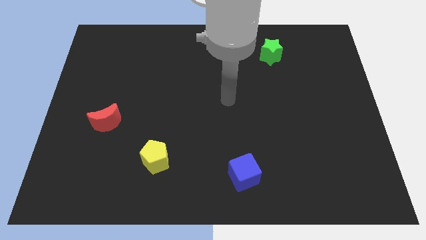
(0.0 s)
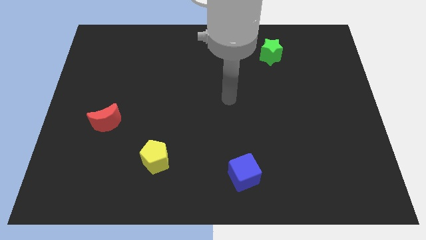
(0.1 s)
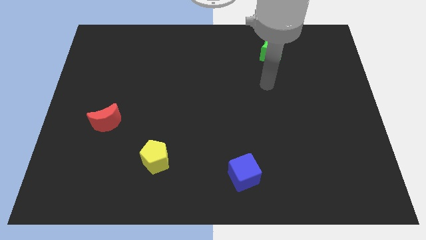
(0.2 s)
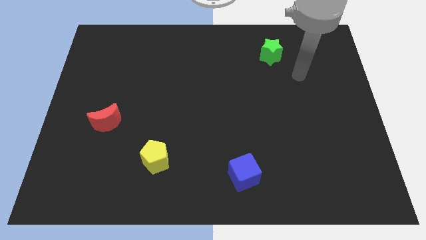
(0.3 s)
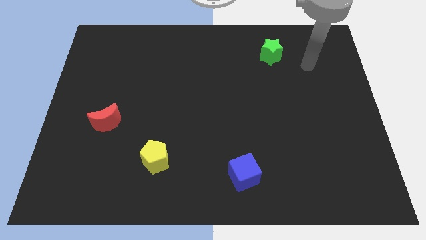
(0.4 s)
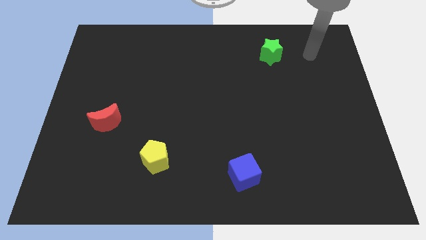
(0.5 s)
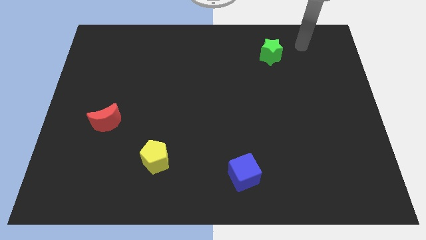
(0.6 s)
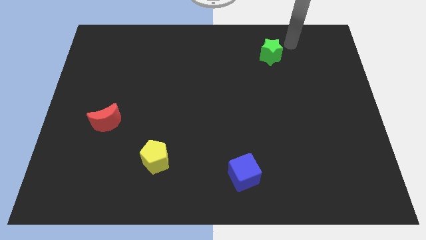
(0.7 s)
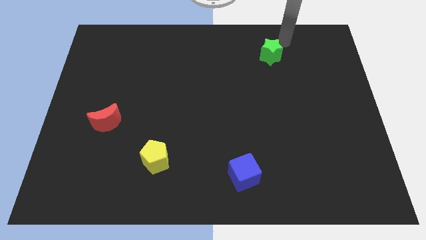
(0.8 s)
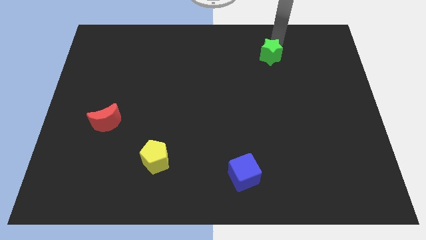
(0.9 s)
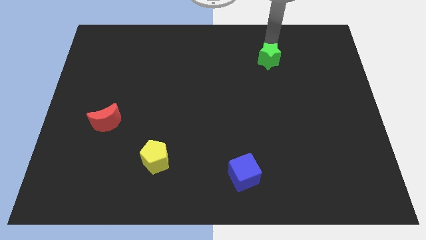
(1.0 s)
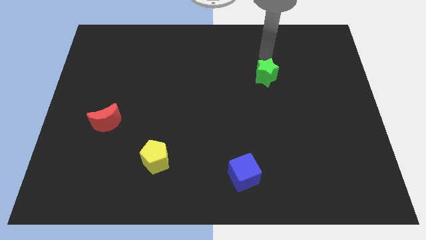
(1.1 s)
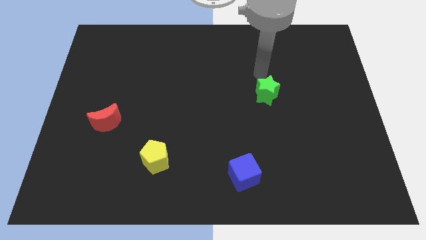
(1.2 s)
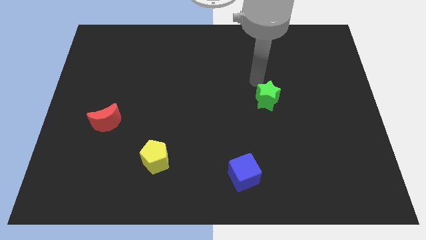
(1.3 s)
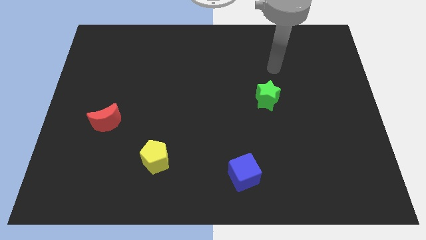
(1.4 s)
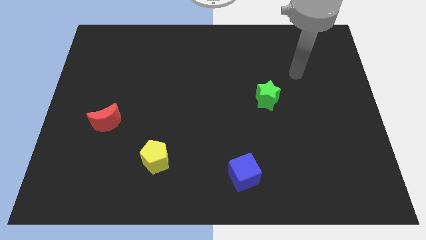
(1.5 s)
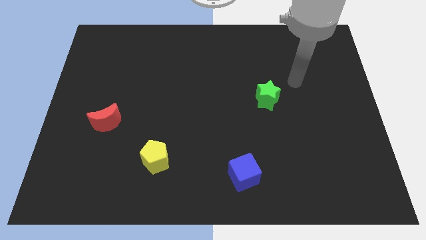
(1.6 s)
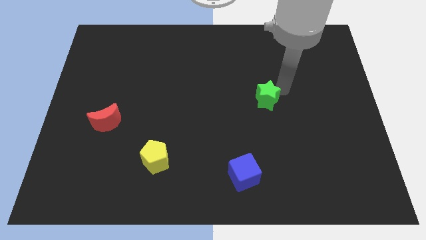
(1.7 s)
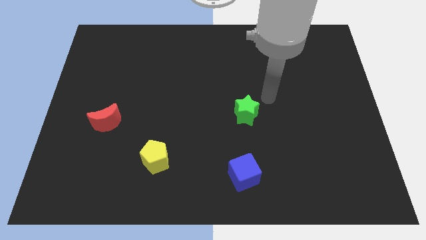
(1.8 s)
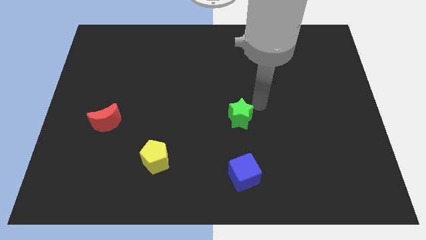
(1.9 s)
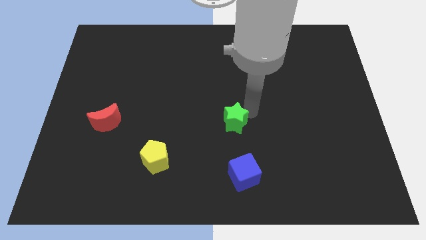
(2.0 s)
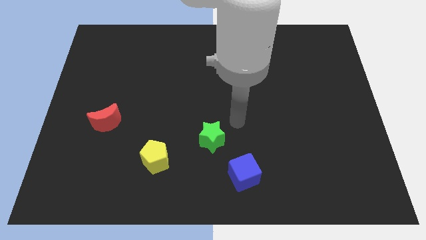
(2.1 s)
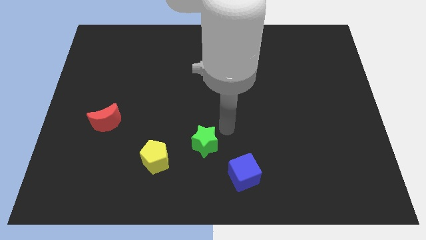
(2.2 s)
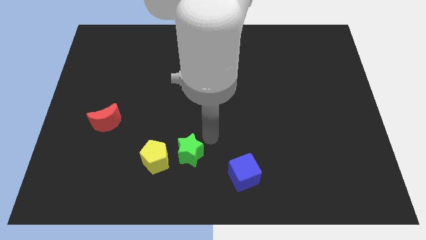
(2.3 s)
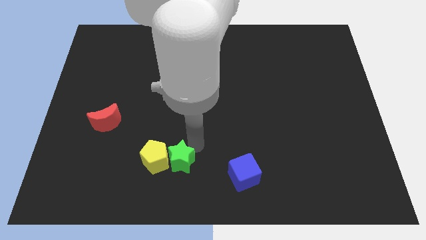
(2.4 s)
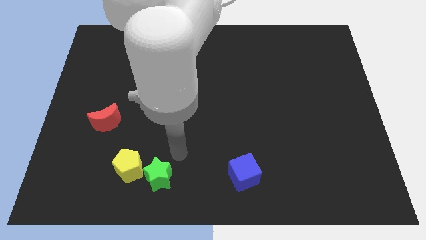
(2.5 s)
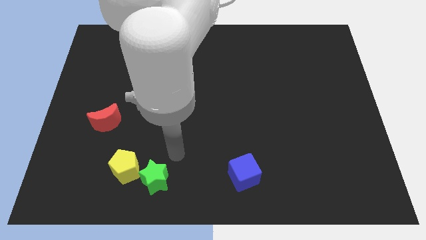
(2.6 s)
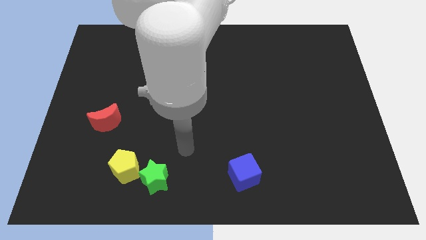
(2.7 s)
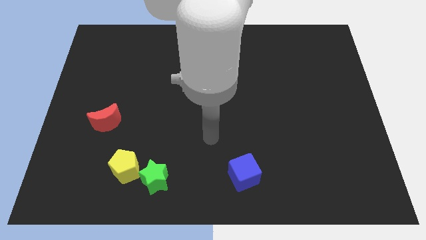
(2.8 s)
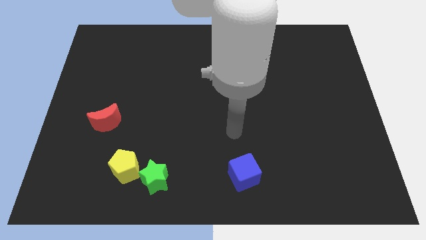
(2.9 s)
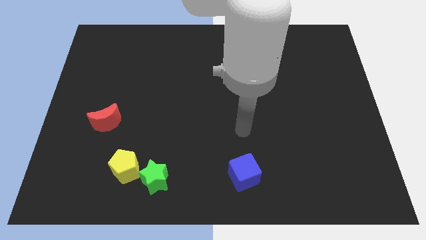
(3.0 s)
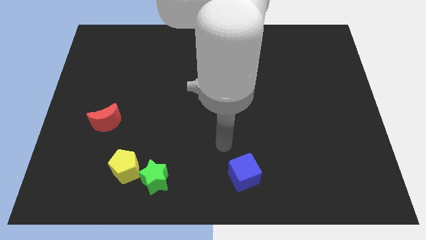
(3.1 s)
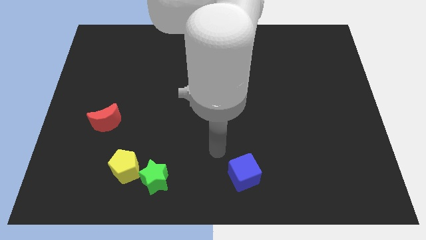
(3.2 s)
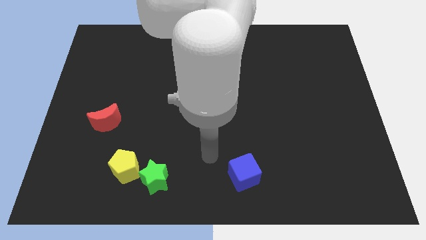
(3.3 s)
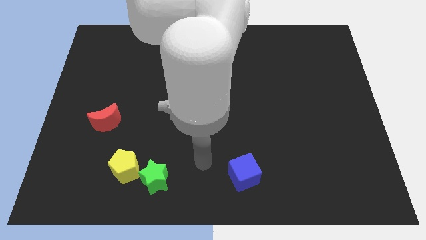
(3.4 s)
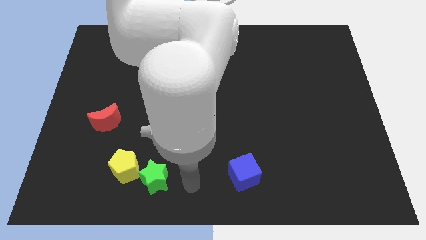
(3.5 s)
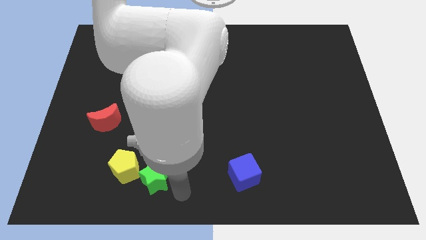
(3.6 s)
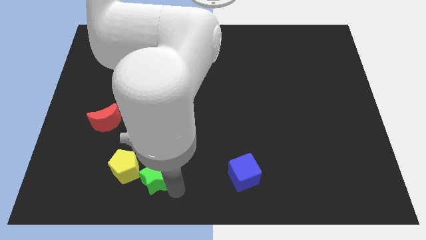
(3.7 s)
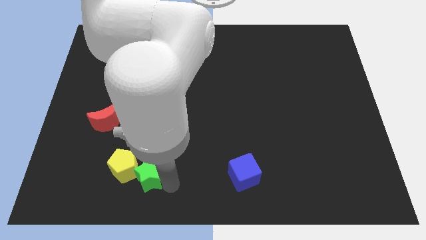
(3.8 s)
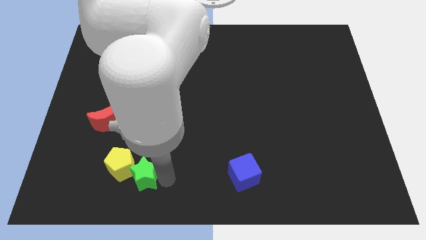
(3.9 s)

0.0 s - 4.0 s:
put the green block to the yellow pentagon

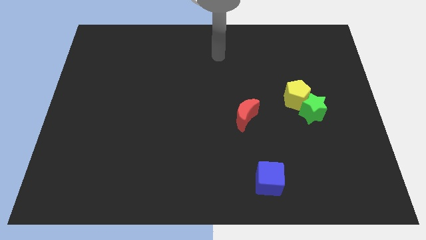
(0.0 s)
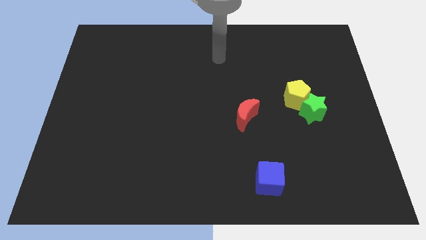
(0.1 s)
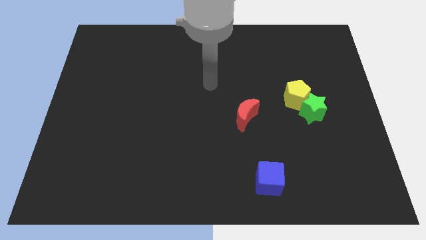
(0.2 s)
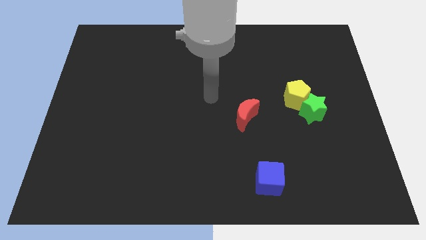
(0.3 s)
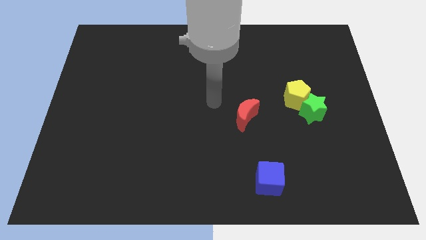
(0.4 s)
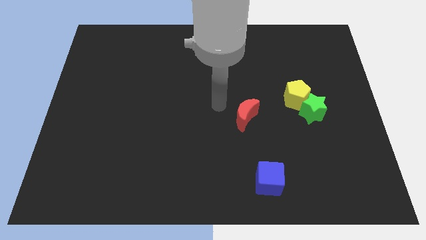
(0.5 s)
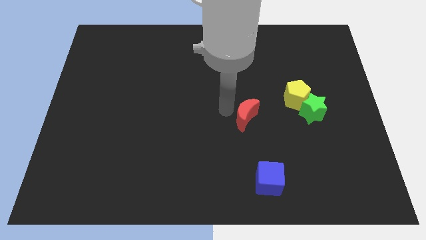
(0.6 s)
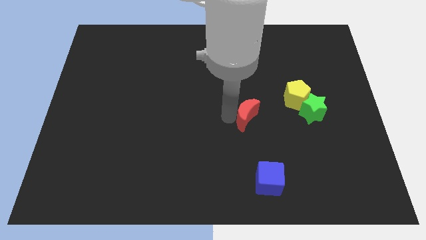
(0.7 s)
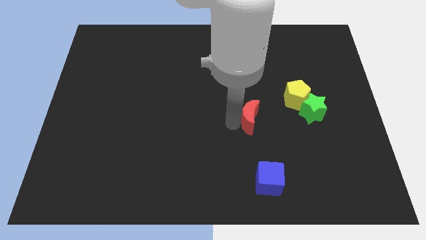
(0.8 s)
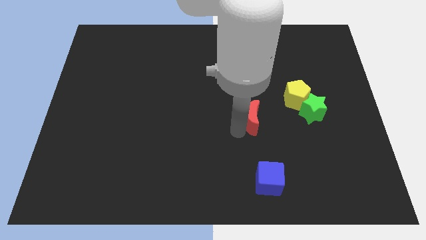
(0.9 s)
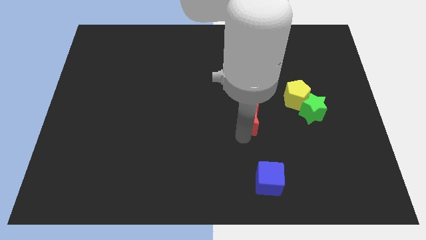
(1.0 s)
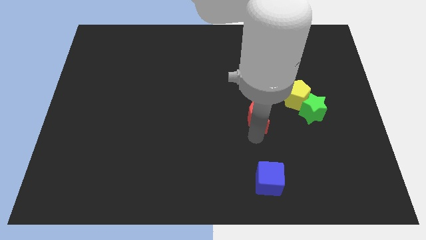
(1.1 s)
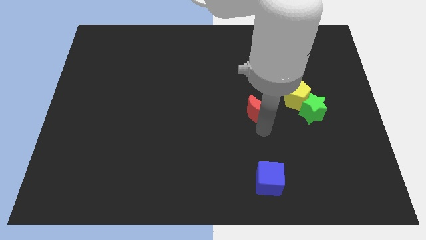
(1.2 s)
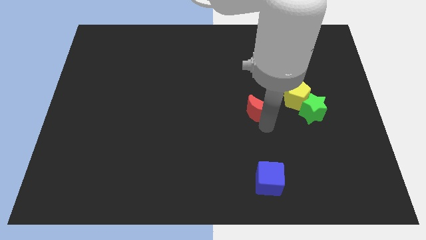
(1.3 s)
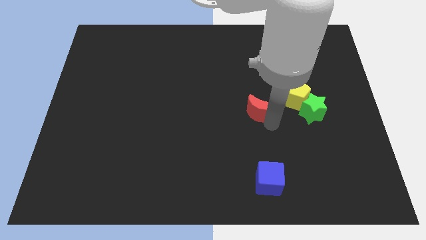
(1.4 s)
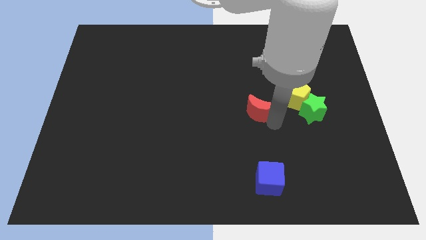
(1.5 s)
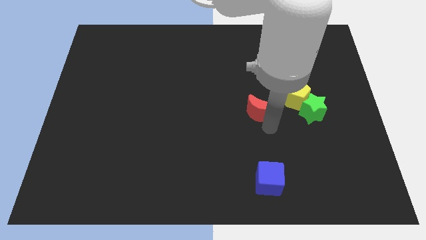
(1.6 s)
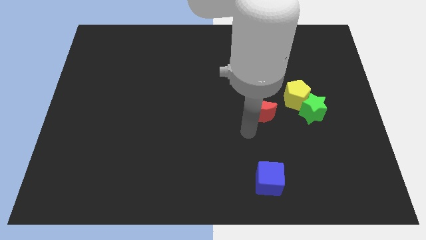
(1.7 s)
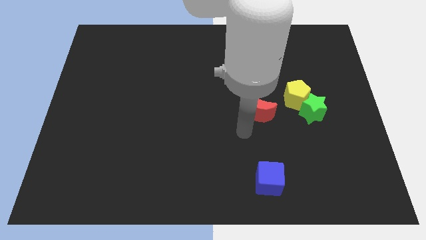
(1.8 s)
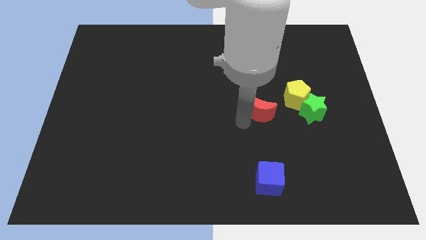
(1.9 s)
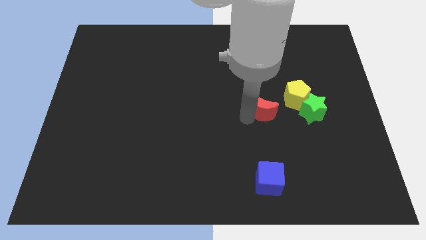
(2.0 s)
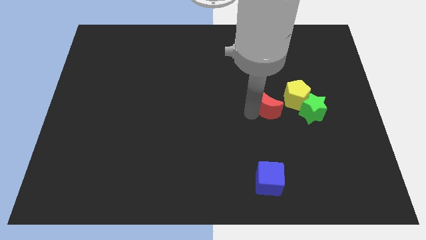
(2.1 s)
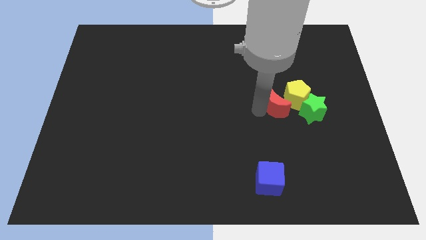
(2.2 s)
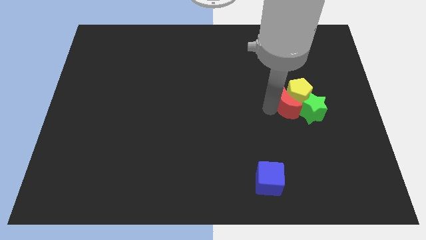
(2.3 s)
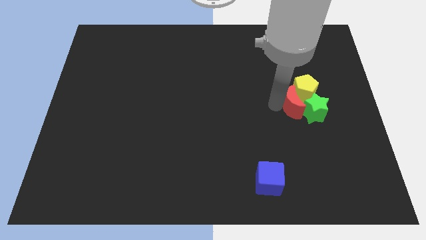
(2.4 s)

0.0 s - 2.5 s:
push the red block to the pentagon

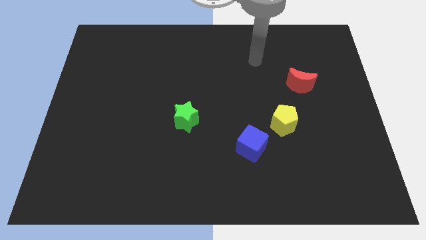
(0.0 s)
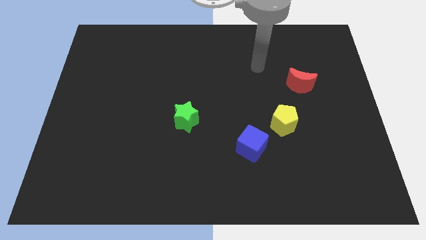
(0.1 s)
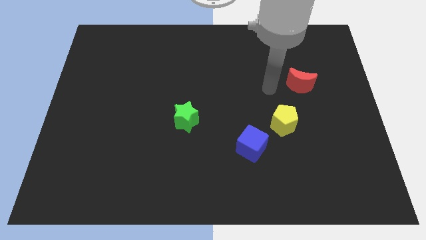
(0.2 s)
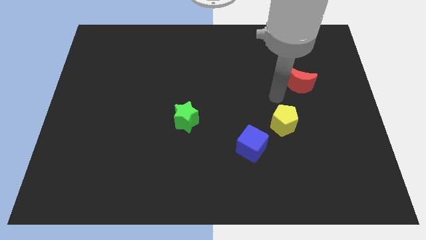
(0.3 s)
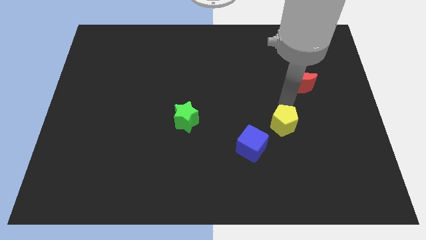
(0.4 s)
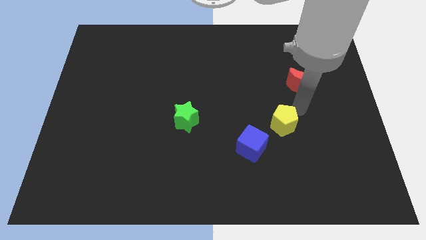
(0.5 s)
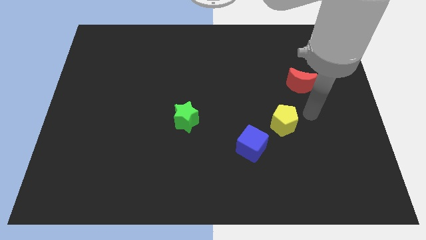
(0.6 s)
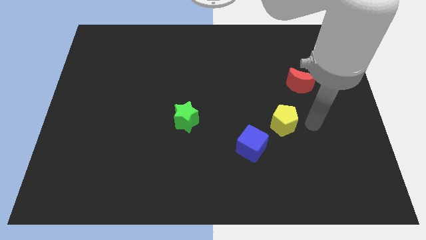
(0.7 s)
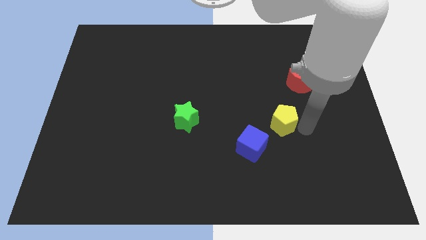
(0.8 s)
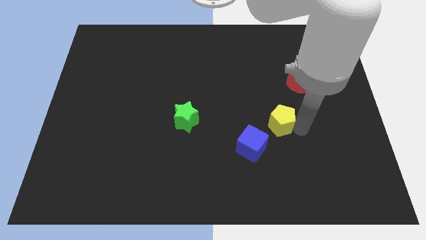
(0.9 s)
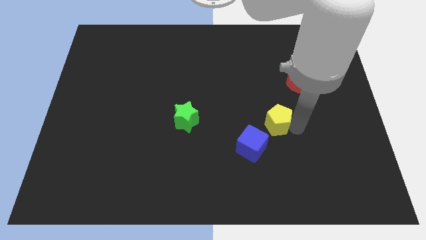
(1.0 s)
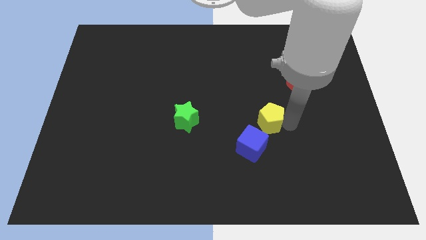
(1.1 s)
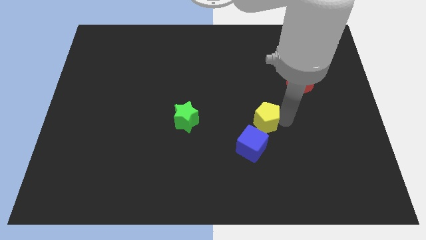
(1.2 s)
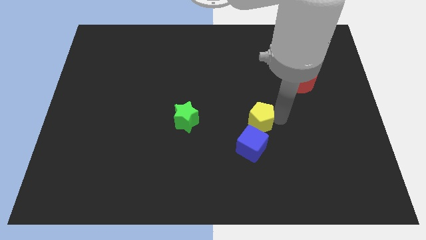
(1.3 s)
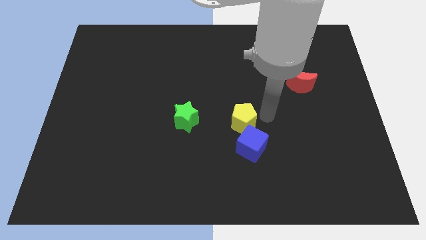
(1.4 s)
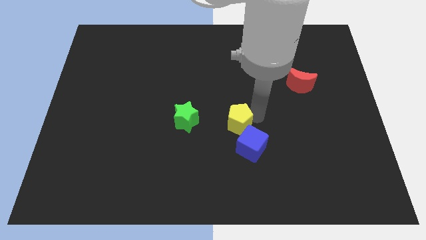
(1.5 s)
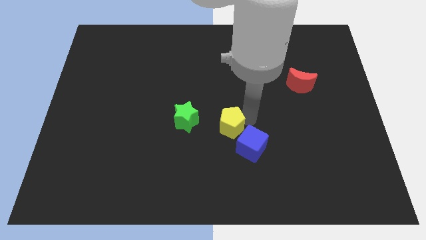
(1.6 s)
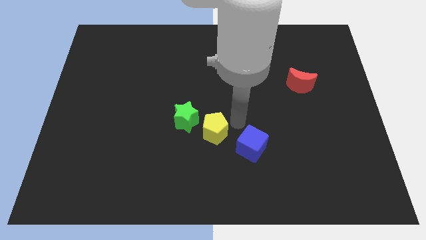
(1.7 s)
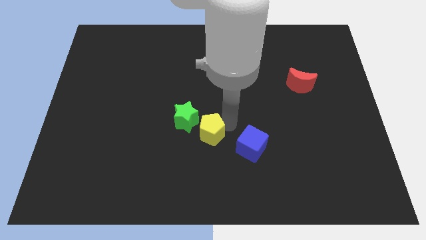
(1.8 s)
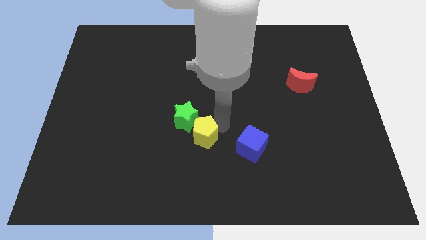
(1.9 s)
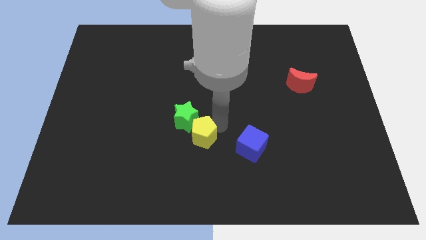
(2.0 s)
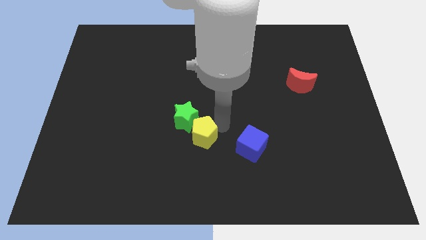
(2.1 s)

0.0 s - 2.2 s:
move the pentagon close to the star
